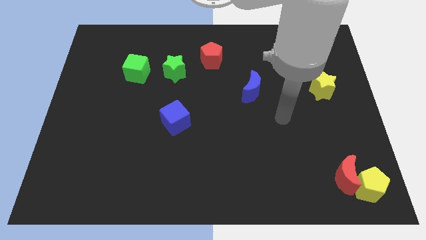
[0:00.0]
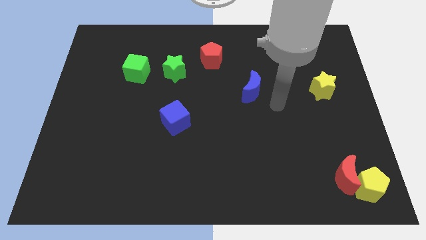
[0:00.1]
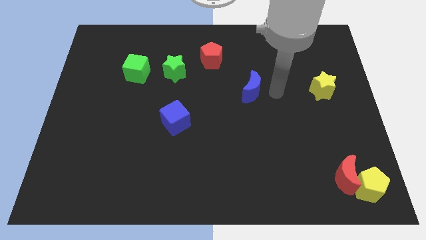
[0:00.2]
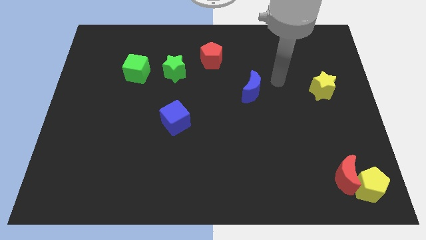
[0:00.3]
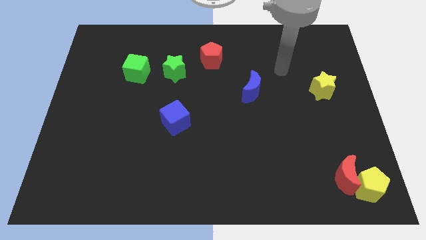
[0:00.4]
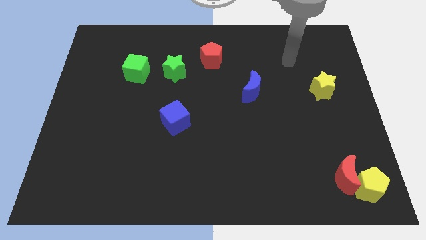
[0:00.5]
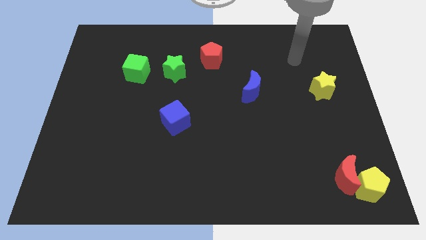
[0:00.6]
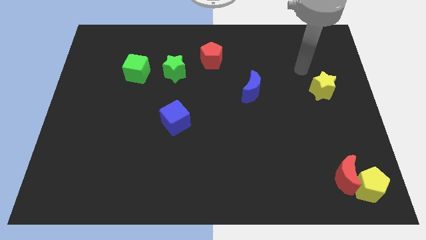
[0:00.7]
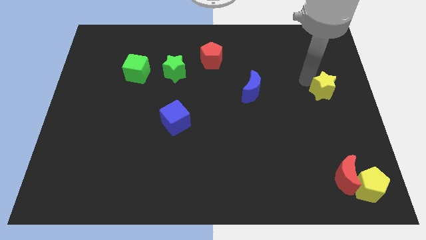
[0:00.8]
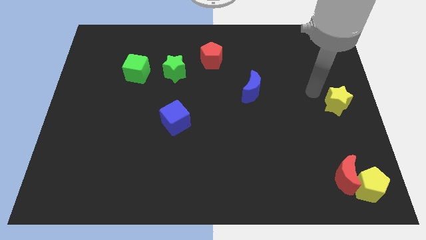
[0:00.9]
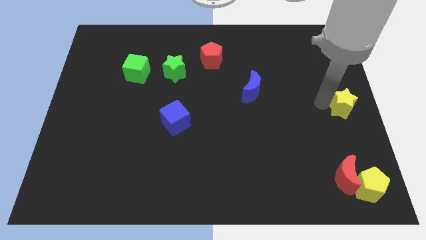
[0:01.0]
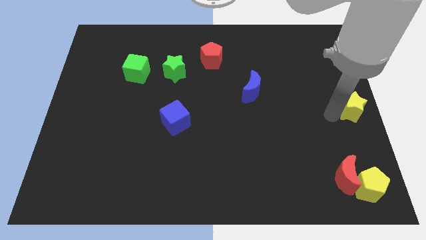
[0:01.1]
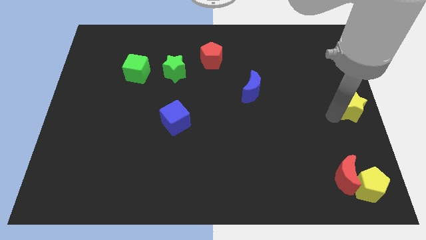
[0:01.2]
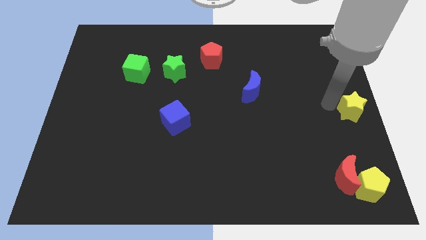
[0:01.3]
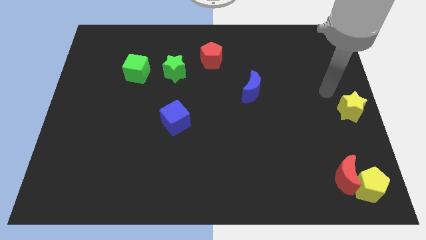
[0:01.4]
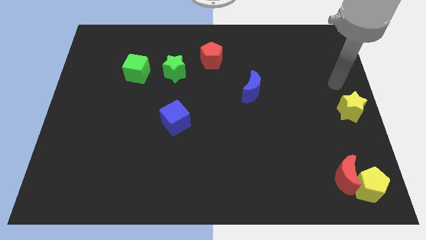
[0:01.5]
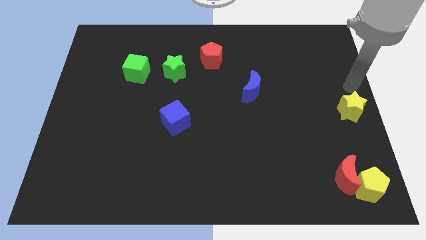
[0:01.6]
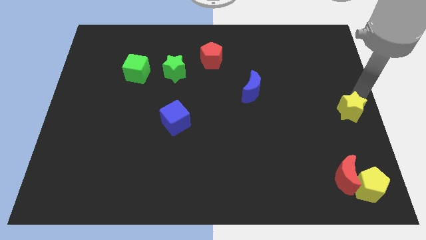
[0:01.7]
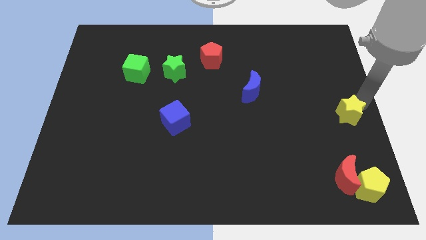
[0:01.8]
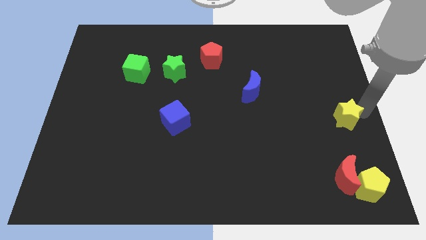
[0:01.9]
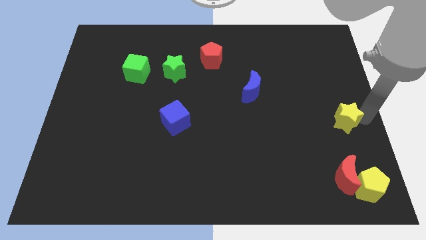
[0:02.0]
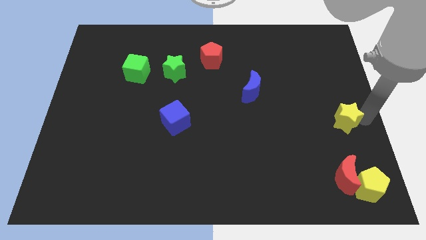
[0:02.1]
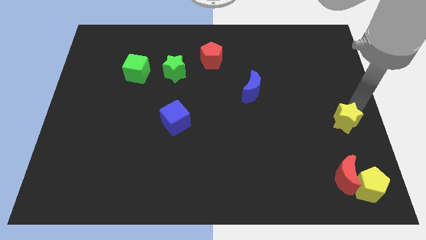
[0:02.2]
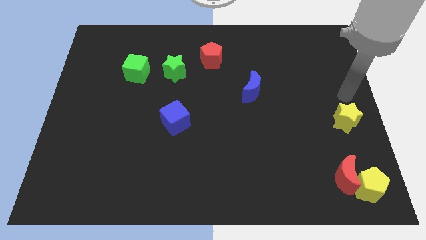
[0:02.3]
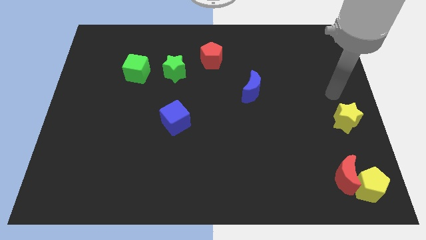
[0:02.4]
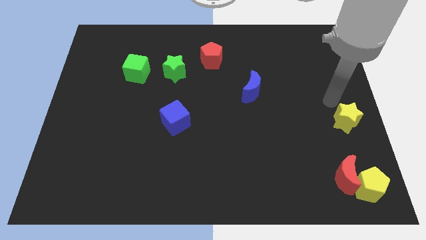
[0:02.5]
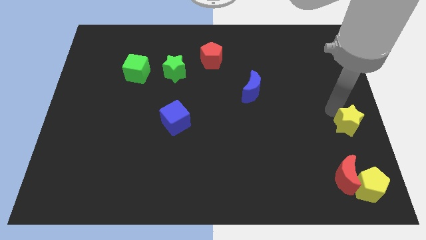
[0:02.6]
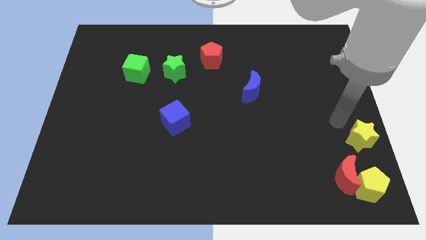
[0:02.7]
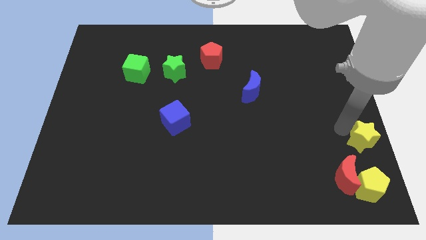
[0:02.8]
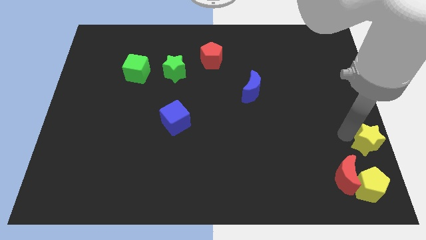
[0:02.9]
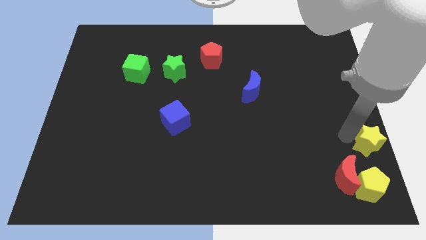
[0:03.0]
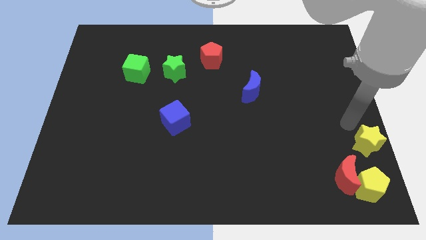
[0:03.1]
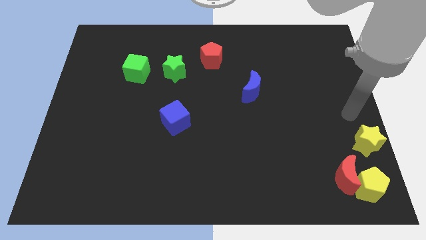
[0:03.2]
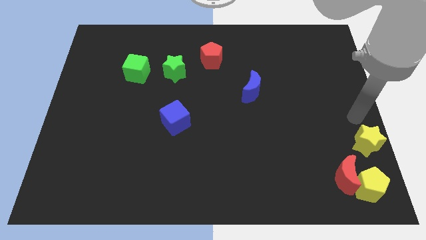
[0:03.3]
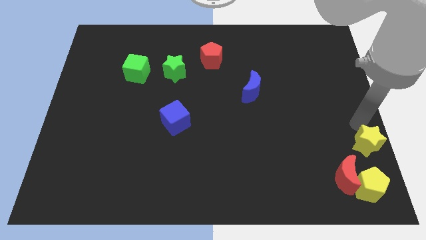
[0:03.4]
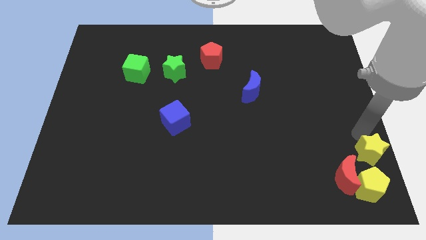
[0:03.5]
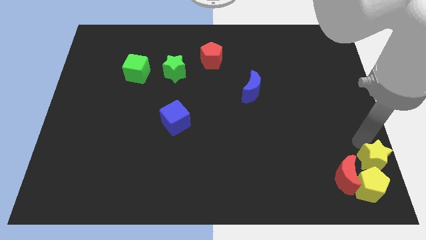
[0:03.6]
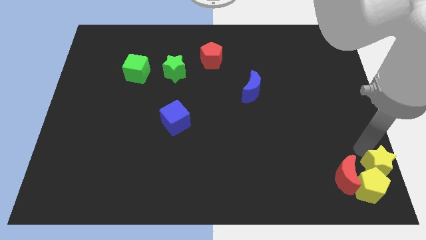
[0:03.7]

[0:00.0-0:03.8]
push the yellow star into both the blocks

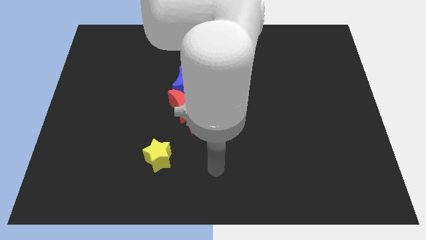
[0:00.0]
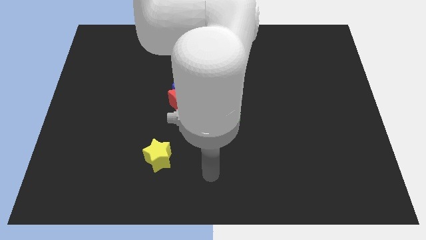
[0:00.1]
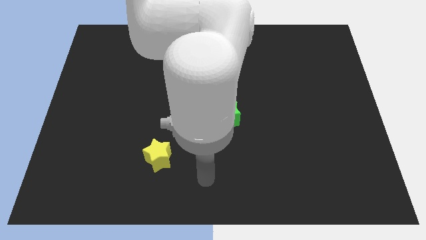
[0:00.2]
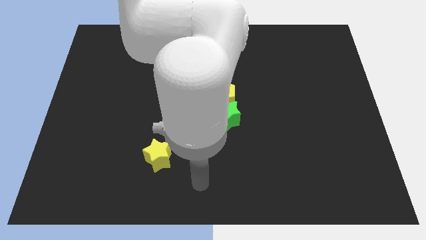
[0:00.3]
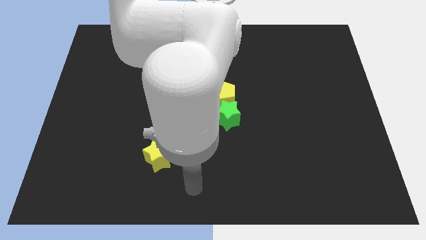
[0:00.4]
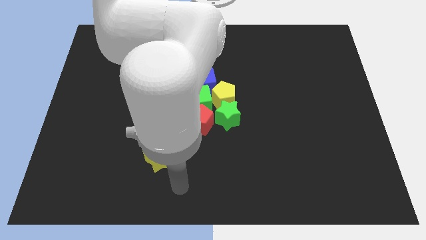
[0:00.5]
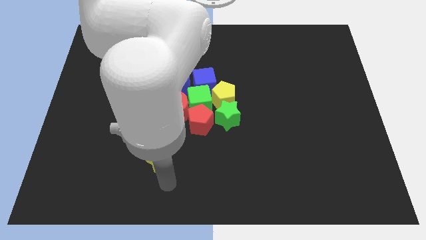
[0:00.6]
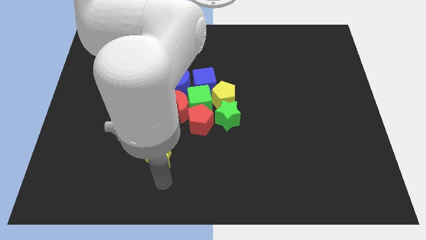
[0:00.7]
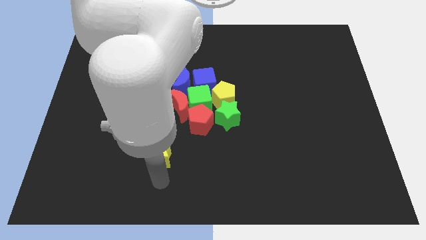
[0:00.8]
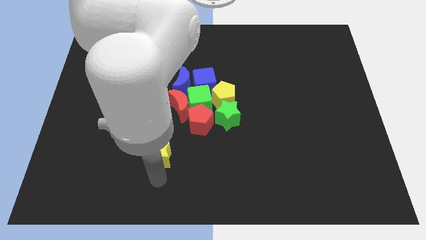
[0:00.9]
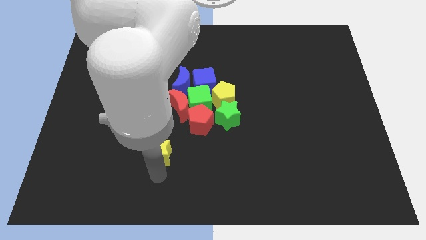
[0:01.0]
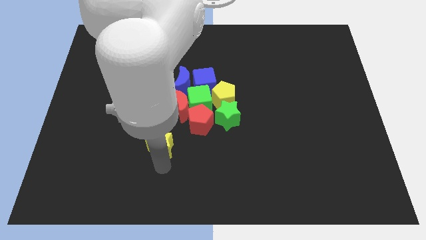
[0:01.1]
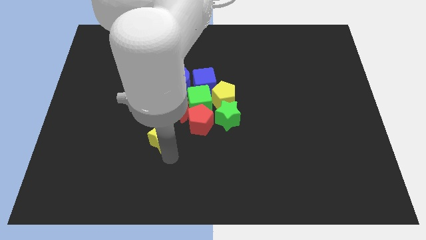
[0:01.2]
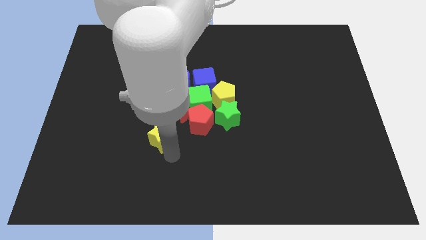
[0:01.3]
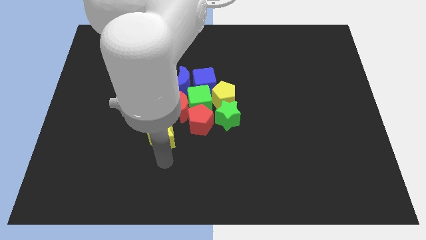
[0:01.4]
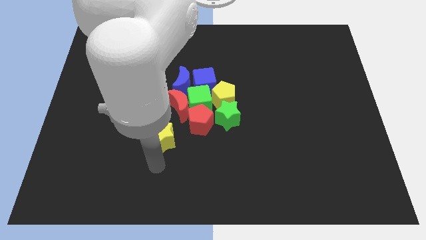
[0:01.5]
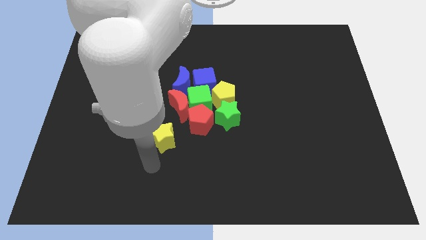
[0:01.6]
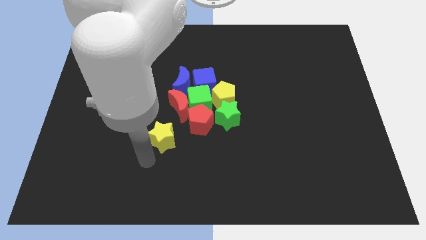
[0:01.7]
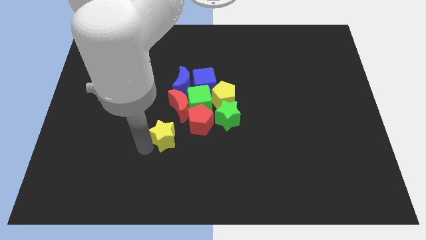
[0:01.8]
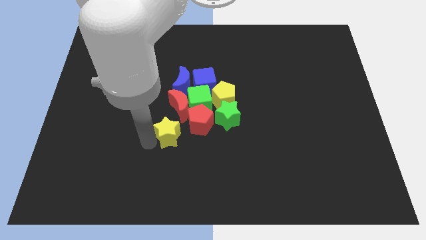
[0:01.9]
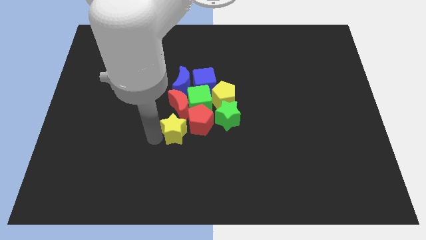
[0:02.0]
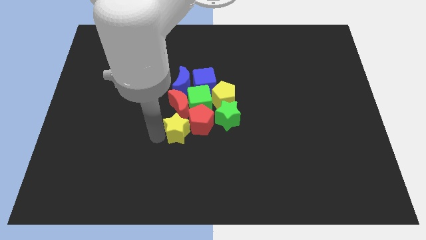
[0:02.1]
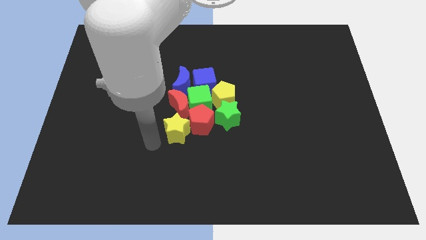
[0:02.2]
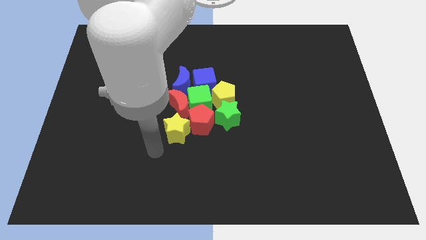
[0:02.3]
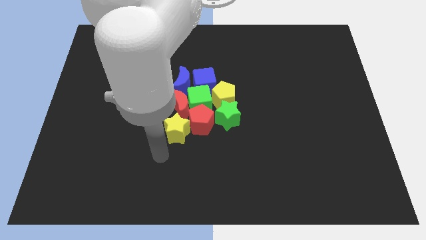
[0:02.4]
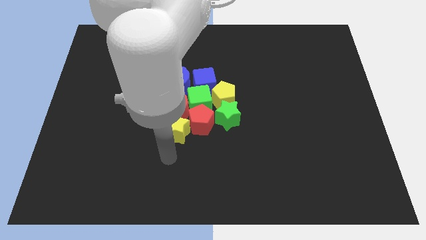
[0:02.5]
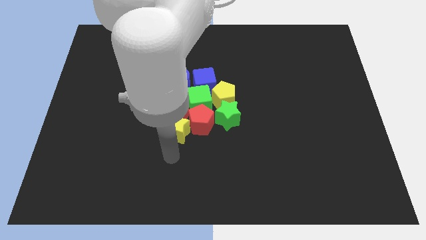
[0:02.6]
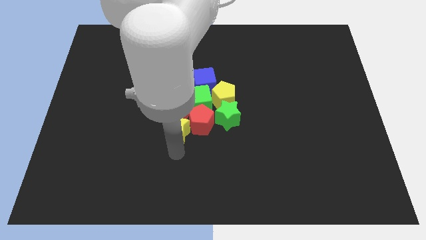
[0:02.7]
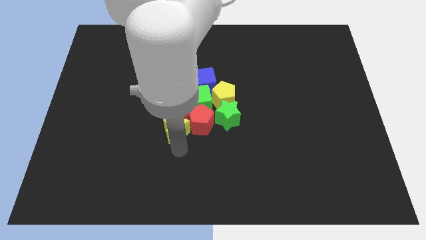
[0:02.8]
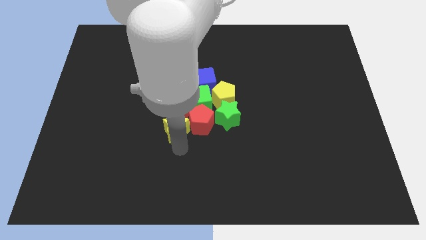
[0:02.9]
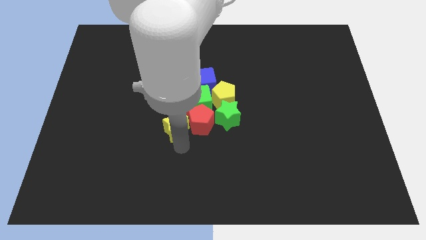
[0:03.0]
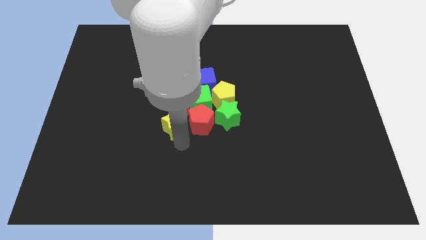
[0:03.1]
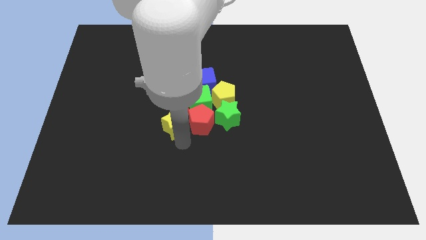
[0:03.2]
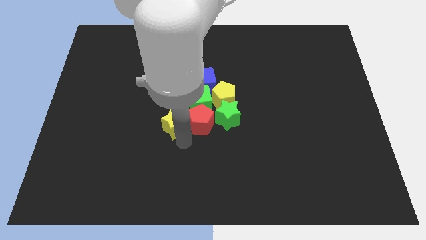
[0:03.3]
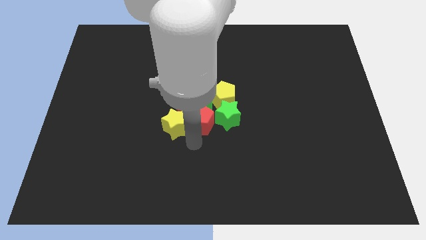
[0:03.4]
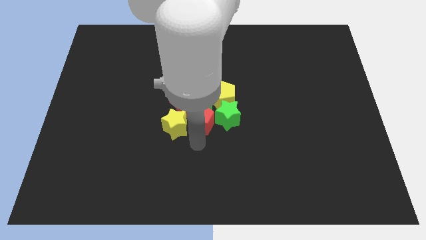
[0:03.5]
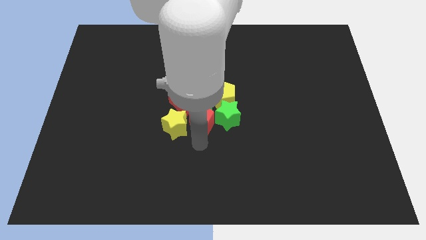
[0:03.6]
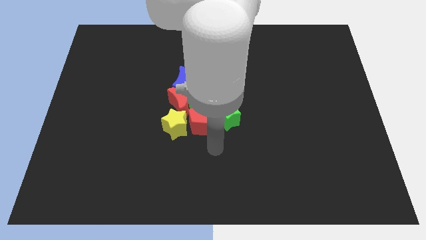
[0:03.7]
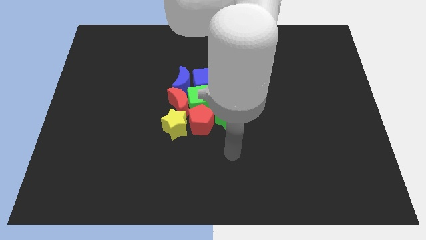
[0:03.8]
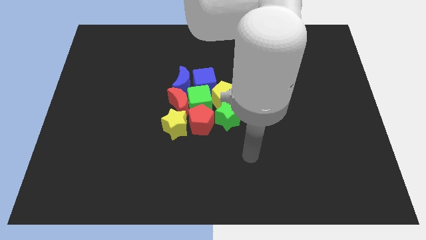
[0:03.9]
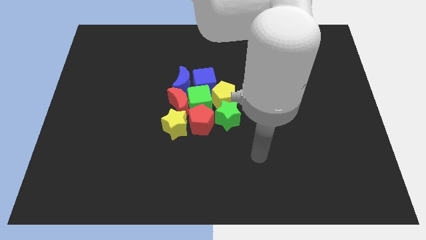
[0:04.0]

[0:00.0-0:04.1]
place yellow star to the bottom of red moon

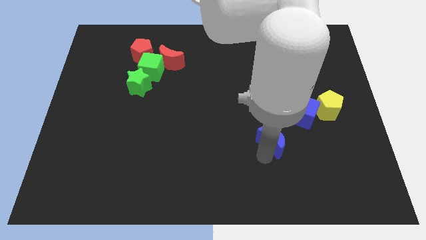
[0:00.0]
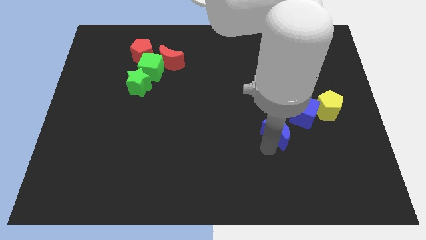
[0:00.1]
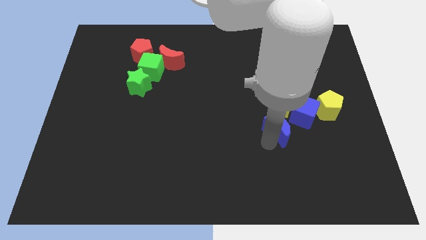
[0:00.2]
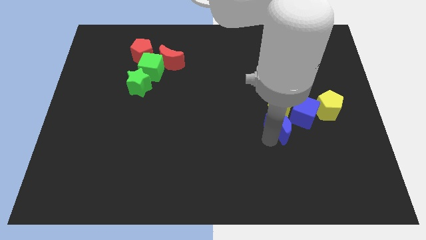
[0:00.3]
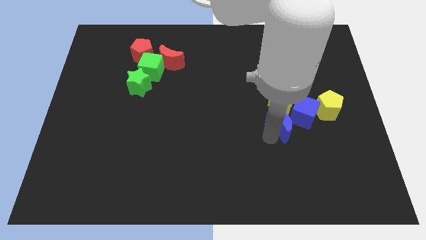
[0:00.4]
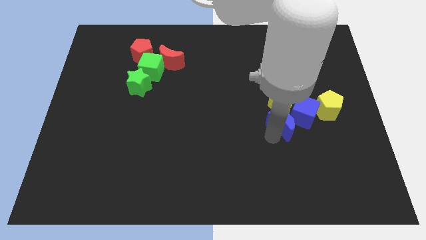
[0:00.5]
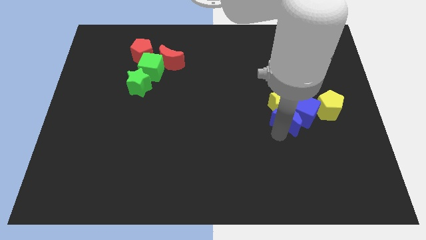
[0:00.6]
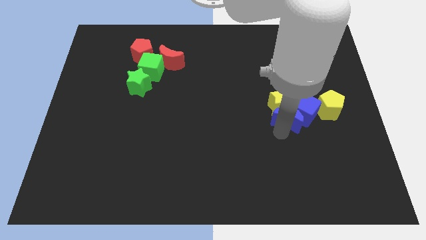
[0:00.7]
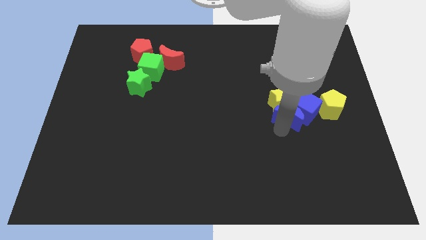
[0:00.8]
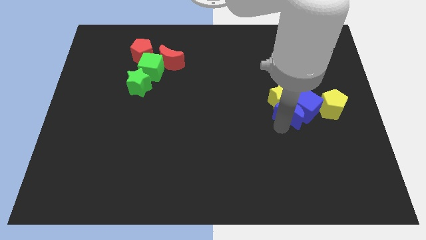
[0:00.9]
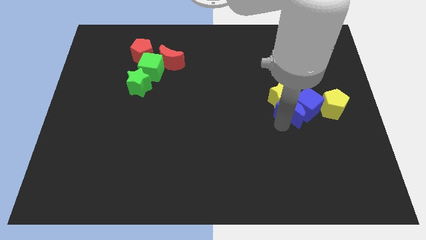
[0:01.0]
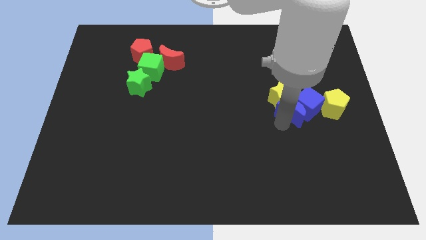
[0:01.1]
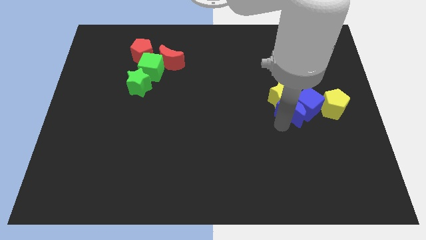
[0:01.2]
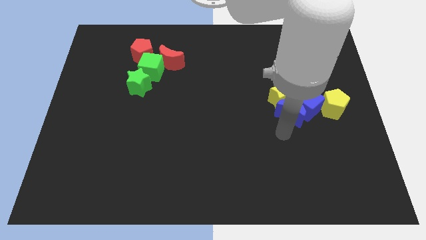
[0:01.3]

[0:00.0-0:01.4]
move the blue crescent into the blue cube
